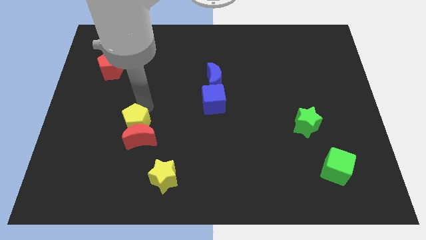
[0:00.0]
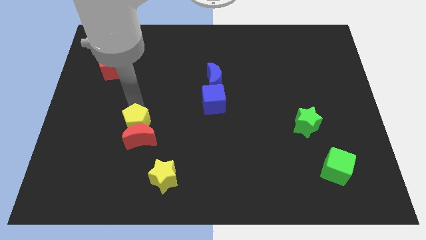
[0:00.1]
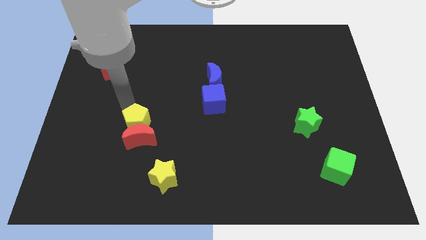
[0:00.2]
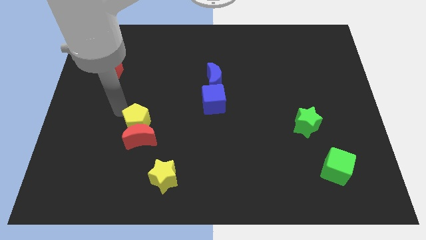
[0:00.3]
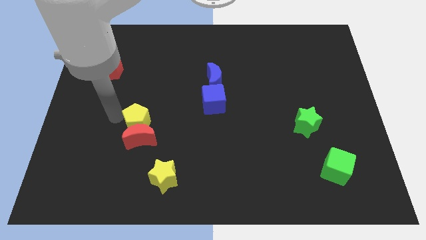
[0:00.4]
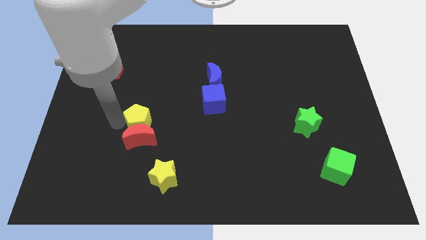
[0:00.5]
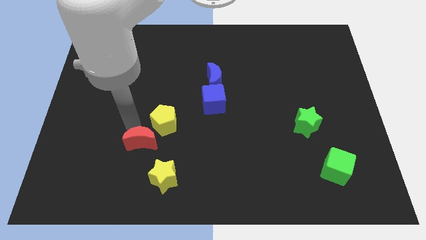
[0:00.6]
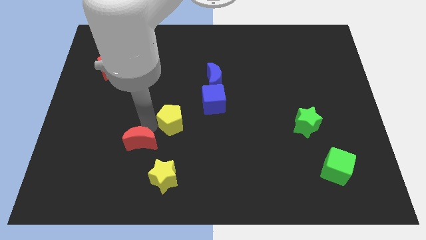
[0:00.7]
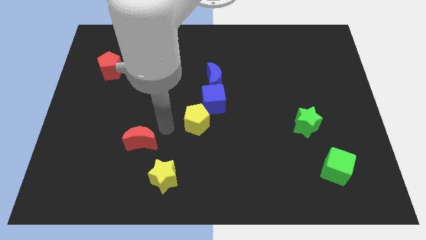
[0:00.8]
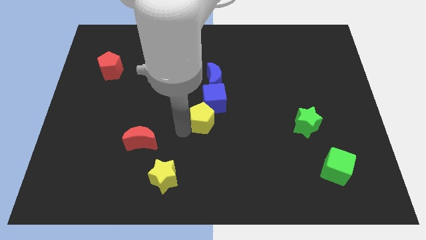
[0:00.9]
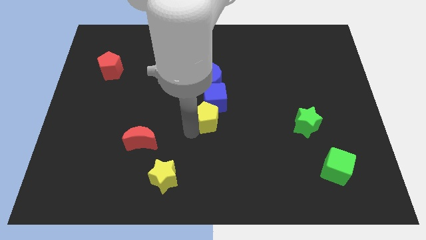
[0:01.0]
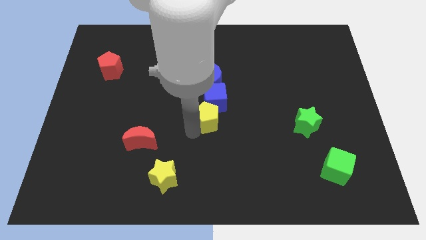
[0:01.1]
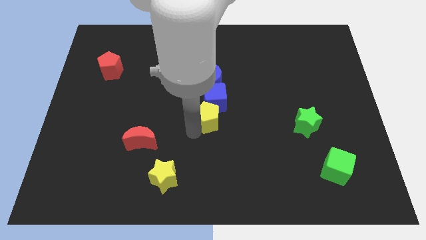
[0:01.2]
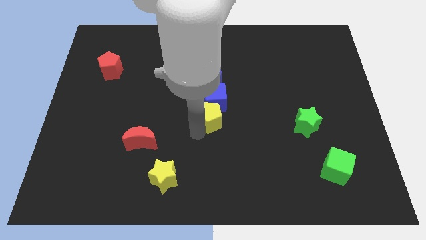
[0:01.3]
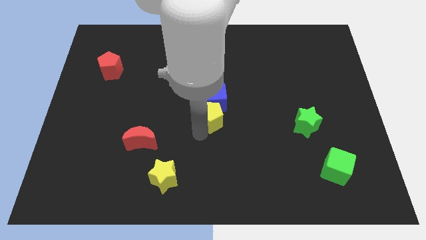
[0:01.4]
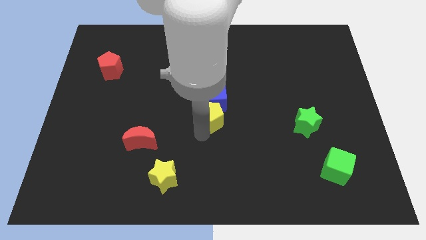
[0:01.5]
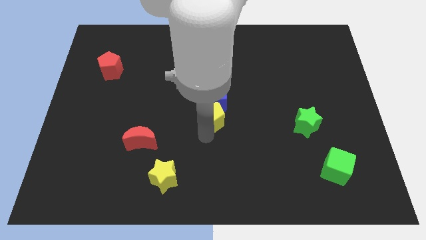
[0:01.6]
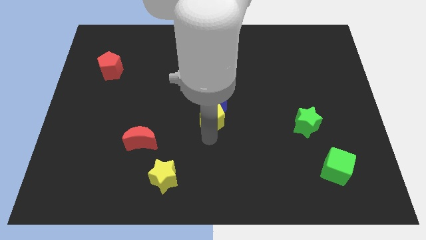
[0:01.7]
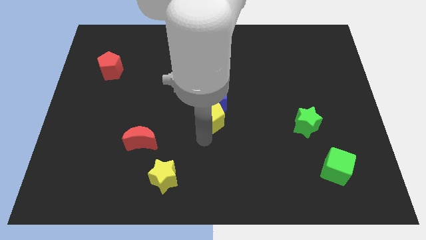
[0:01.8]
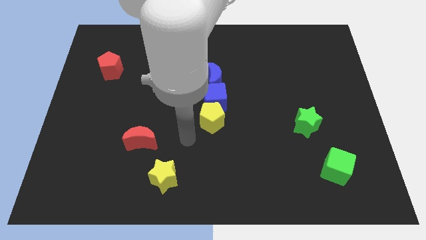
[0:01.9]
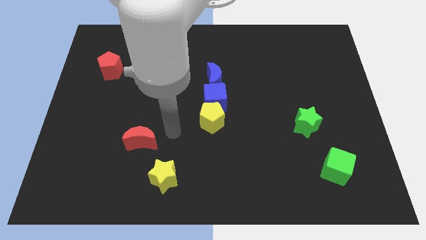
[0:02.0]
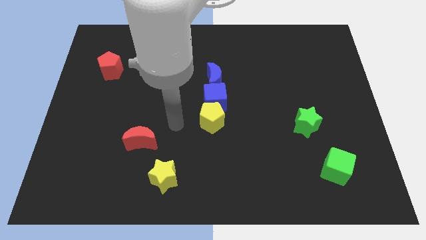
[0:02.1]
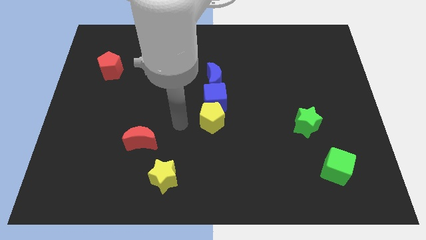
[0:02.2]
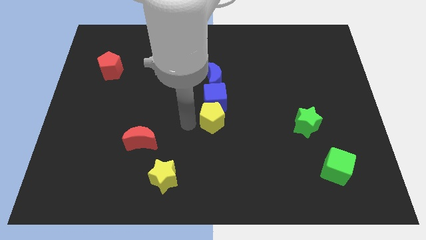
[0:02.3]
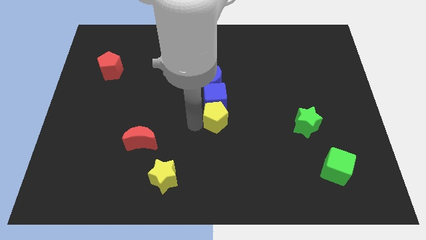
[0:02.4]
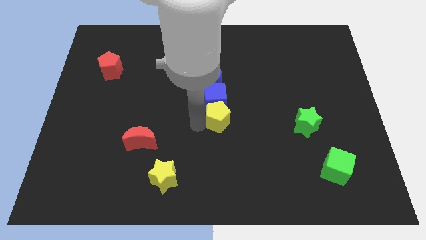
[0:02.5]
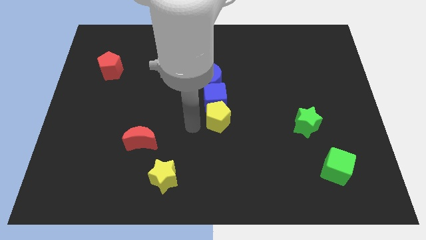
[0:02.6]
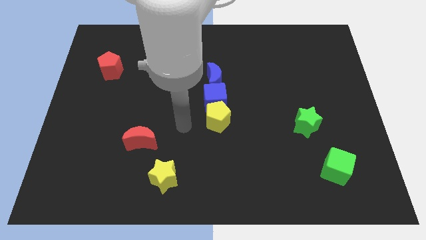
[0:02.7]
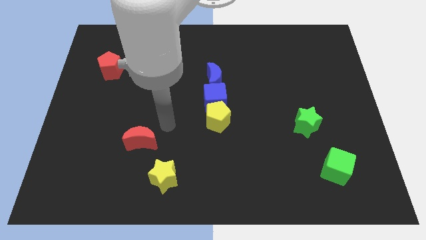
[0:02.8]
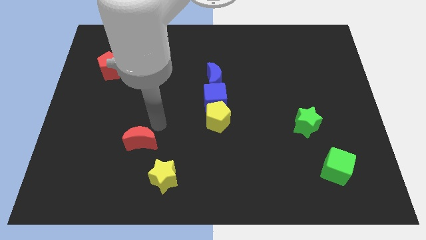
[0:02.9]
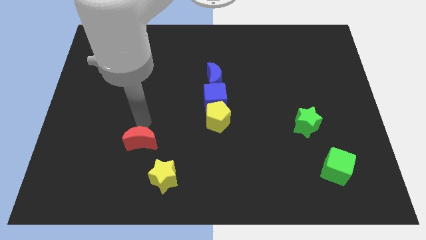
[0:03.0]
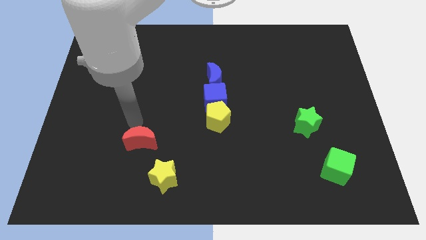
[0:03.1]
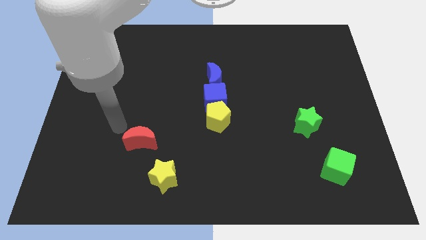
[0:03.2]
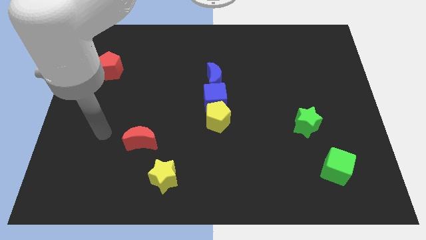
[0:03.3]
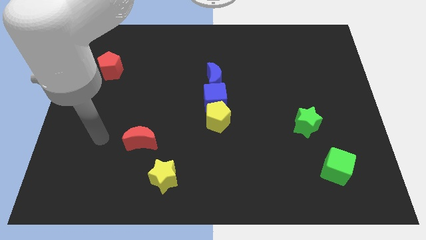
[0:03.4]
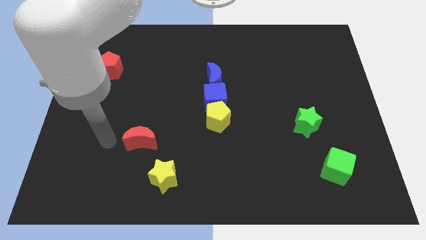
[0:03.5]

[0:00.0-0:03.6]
separate the yellow pentagon from the red crescent

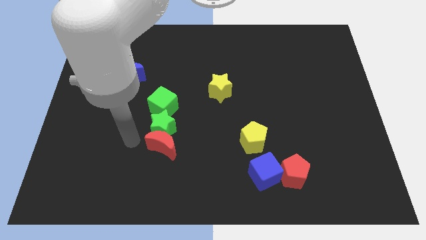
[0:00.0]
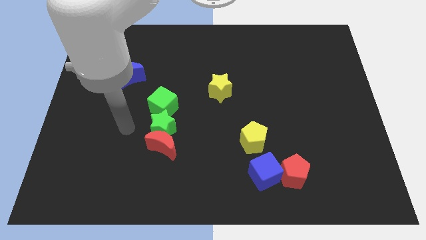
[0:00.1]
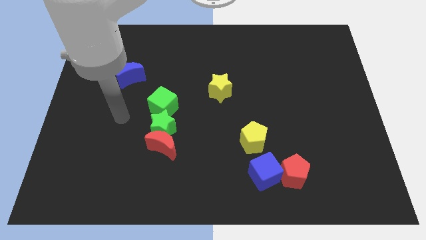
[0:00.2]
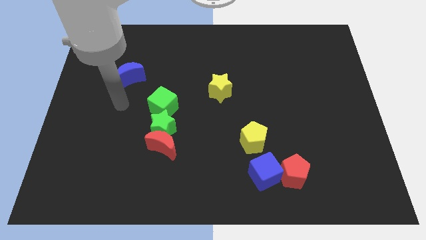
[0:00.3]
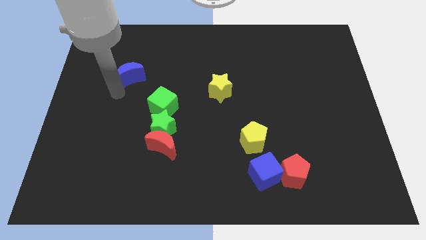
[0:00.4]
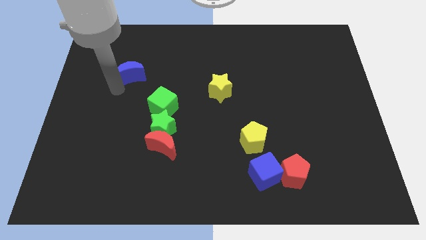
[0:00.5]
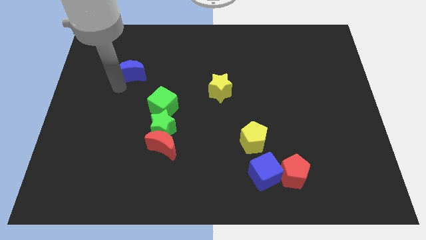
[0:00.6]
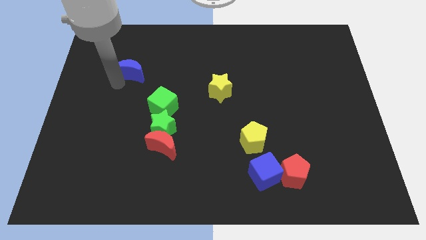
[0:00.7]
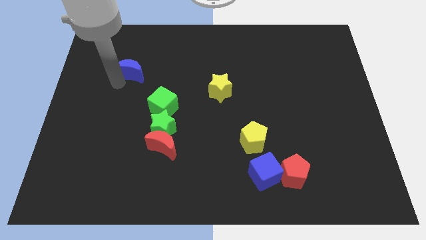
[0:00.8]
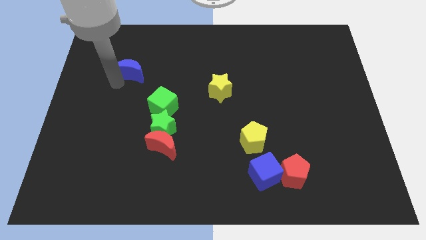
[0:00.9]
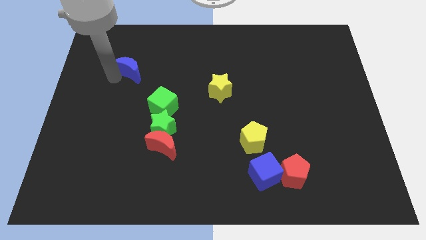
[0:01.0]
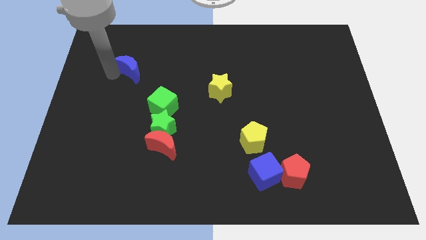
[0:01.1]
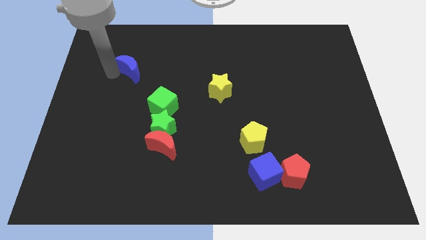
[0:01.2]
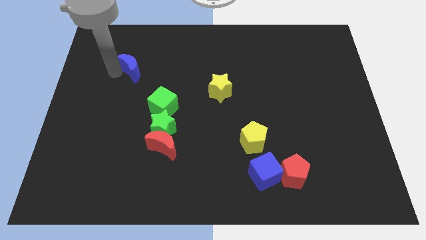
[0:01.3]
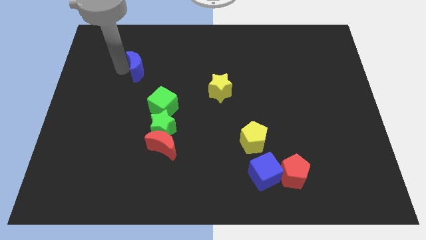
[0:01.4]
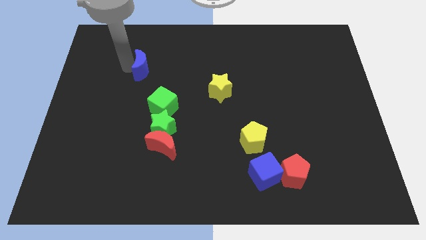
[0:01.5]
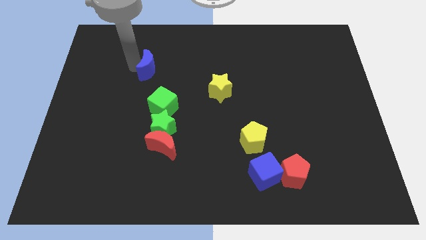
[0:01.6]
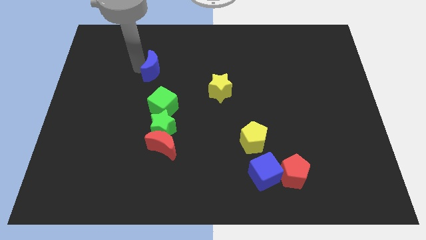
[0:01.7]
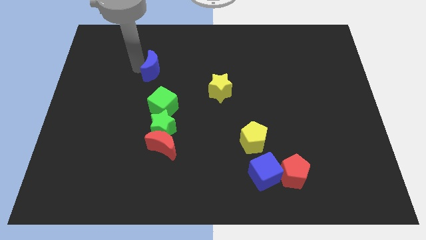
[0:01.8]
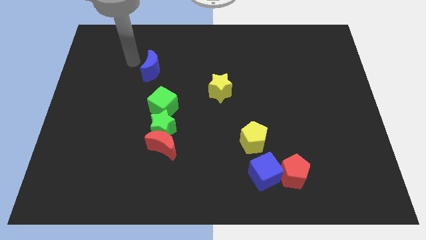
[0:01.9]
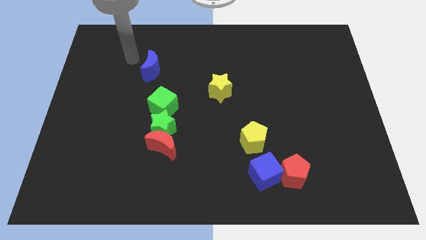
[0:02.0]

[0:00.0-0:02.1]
slide the blue moon slightly to the right of the board

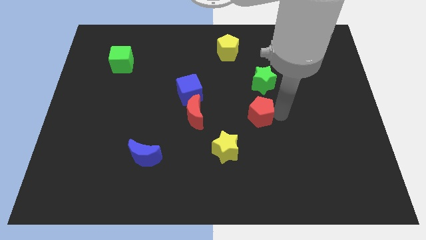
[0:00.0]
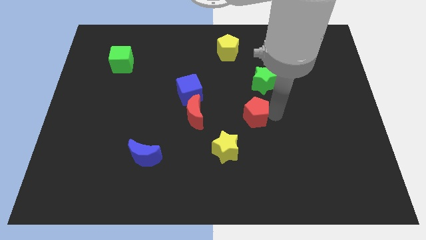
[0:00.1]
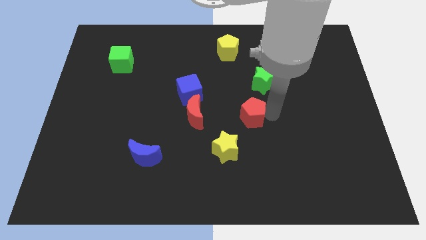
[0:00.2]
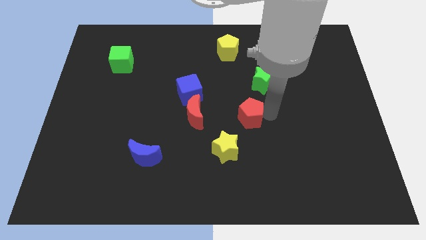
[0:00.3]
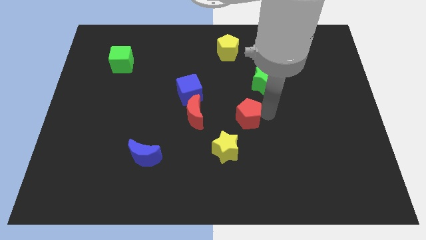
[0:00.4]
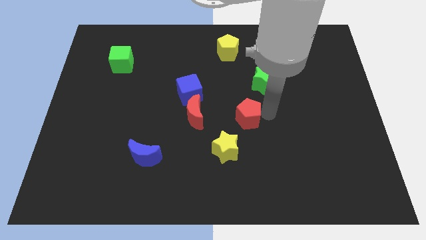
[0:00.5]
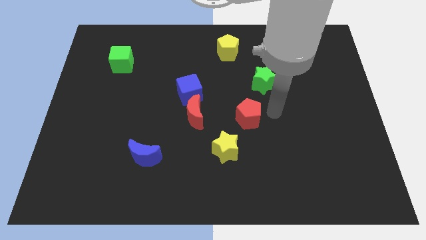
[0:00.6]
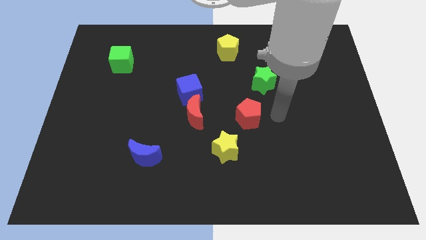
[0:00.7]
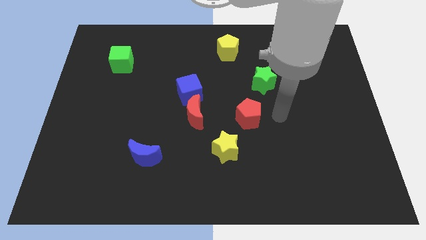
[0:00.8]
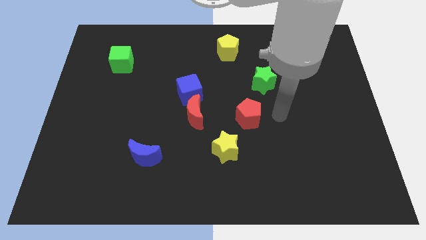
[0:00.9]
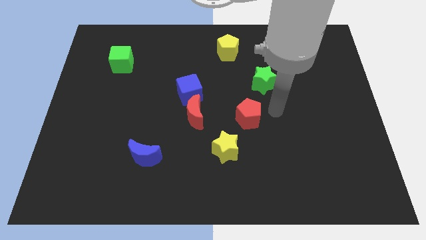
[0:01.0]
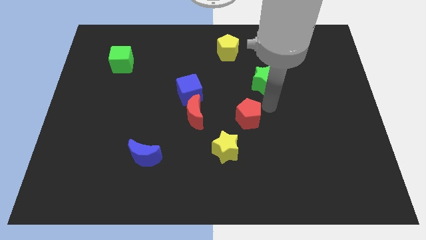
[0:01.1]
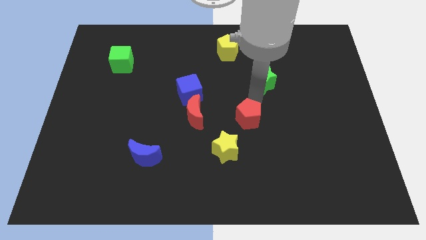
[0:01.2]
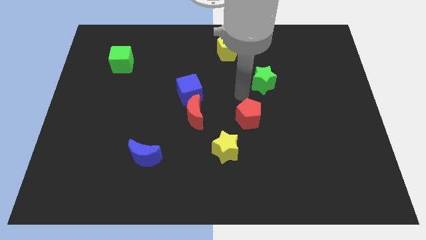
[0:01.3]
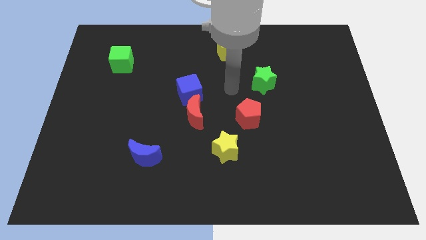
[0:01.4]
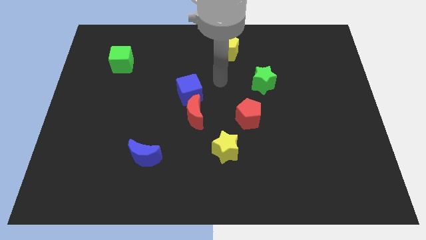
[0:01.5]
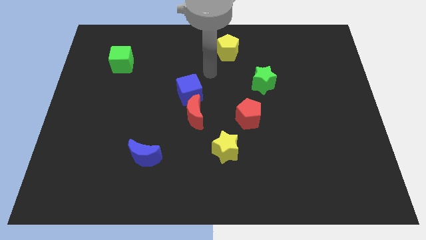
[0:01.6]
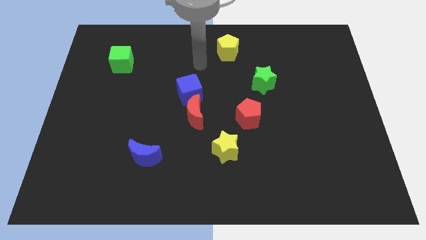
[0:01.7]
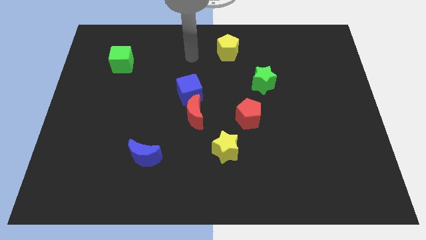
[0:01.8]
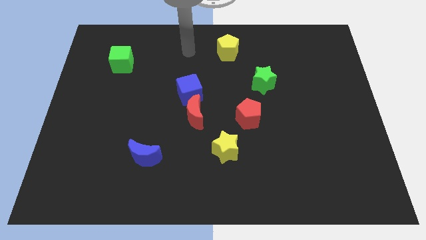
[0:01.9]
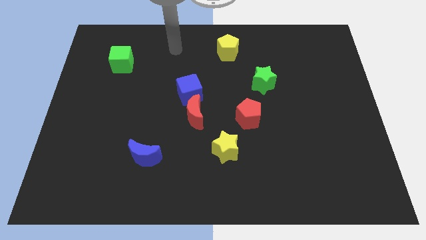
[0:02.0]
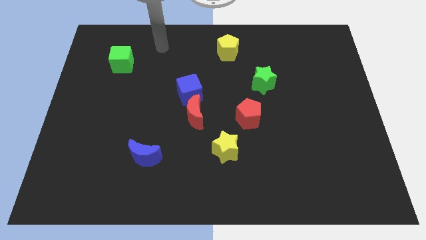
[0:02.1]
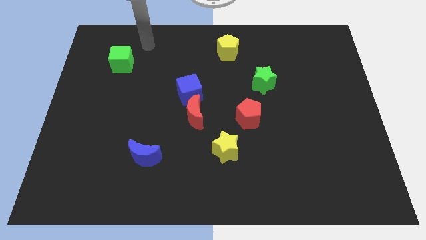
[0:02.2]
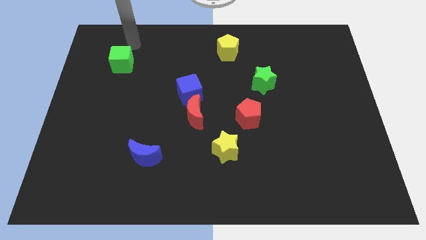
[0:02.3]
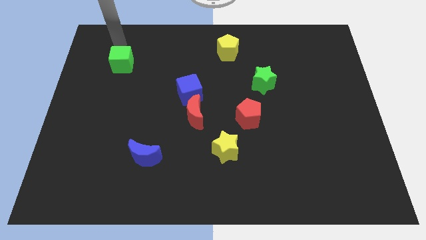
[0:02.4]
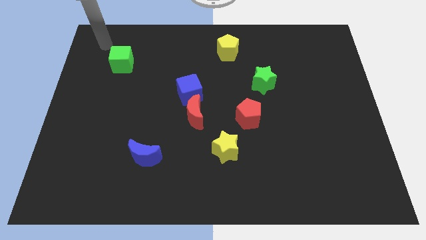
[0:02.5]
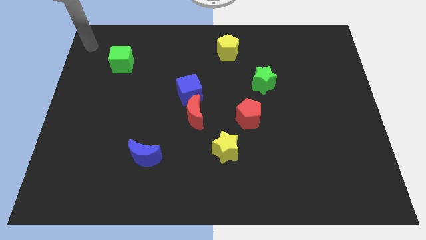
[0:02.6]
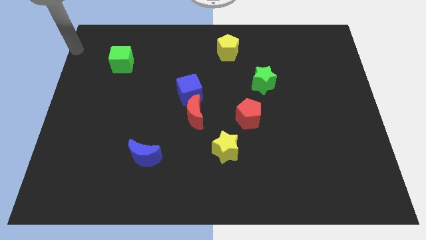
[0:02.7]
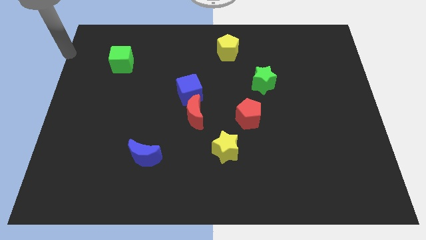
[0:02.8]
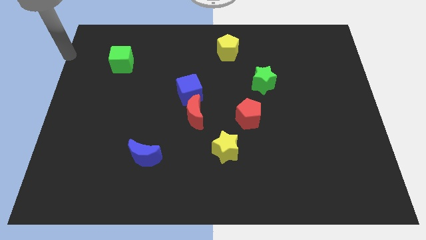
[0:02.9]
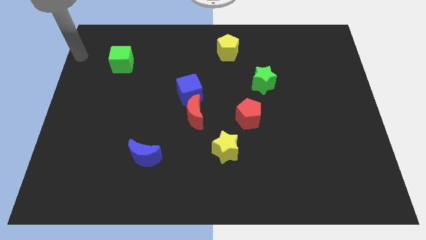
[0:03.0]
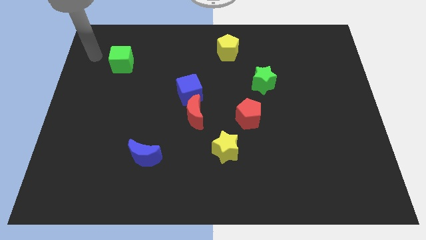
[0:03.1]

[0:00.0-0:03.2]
push the red pentagon to the right side of the red crescent

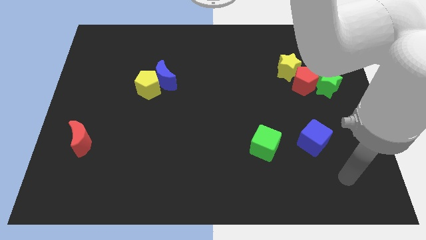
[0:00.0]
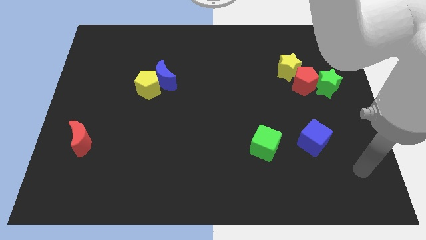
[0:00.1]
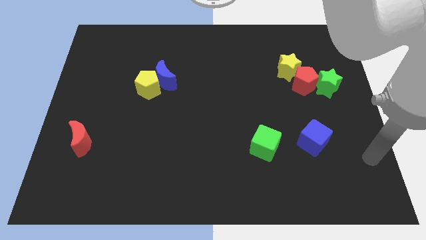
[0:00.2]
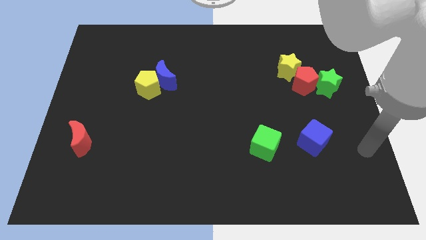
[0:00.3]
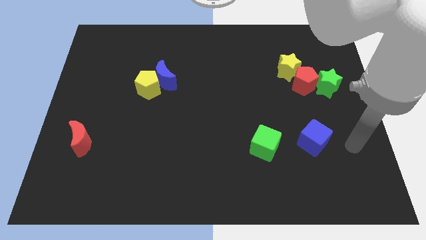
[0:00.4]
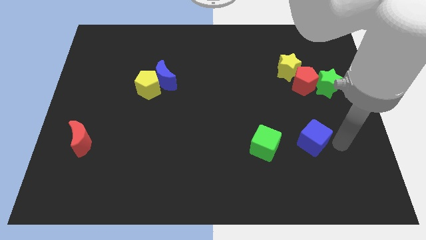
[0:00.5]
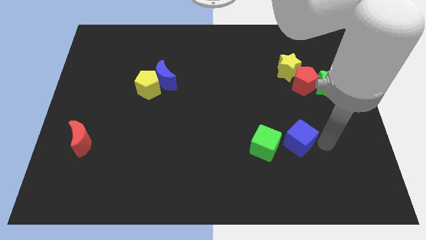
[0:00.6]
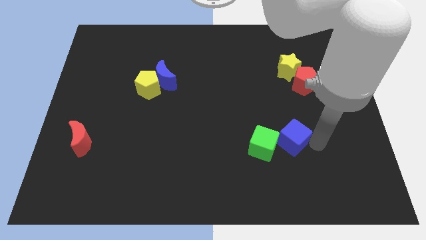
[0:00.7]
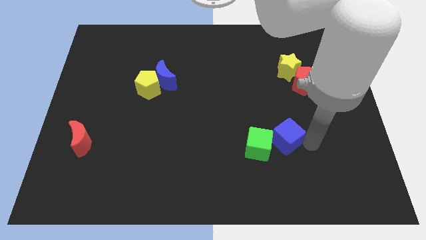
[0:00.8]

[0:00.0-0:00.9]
push the blue cube into the green cube
